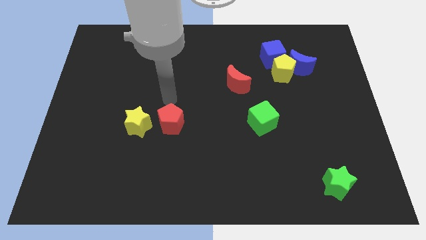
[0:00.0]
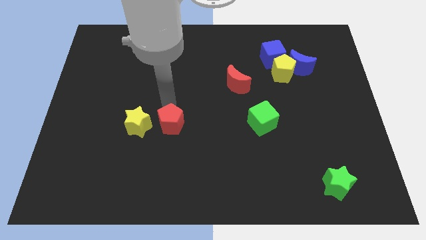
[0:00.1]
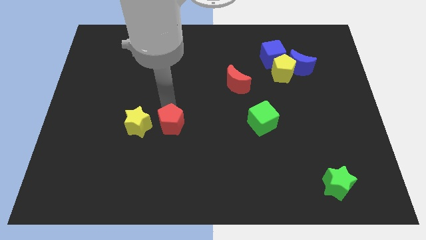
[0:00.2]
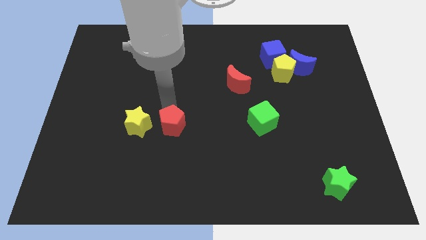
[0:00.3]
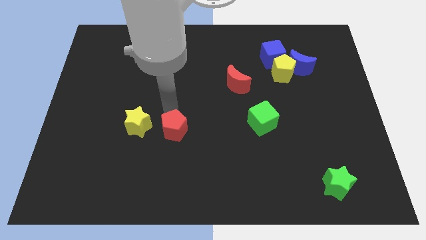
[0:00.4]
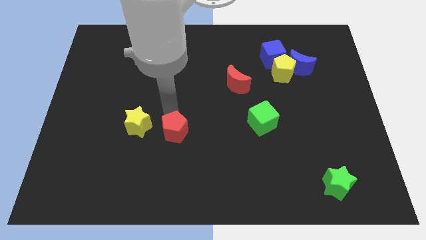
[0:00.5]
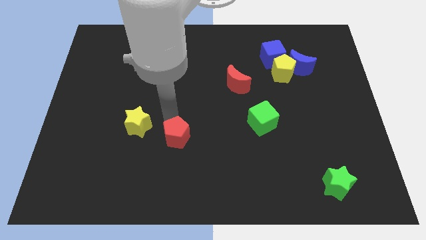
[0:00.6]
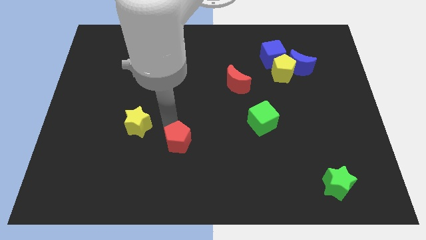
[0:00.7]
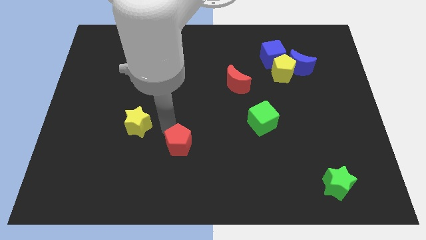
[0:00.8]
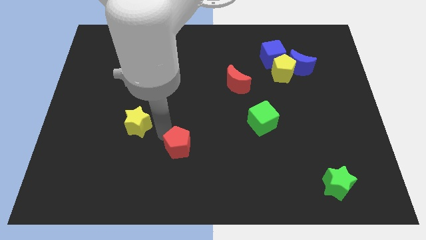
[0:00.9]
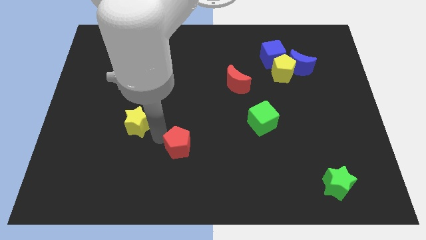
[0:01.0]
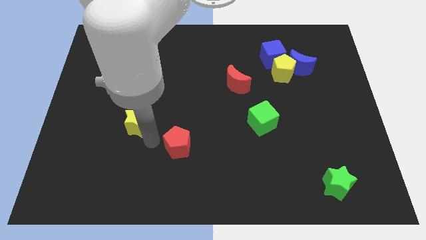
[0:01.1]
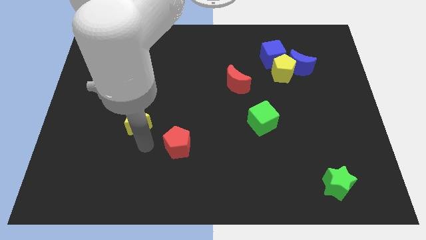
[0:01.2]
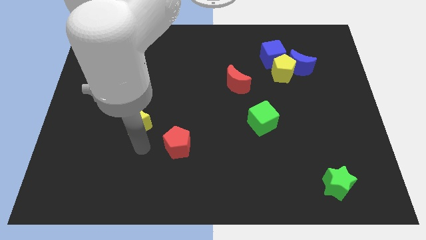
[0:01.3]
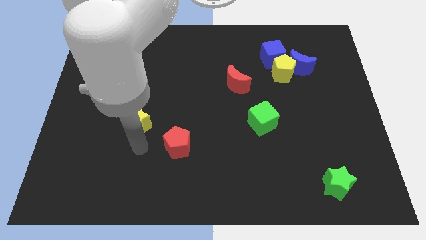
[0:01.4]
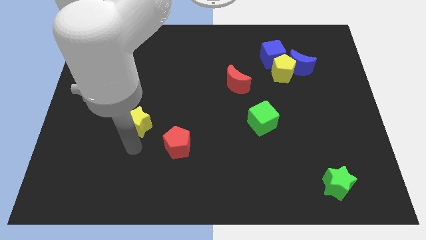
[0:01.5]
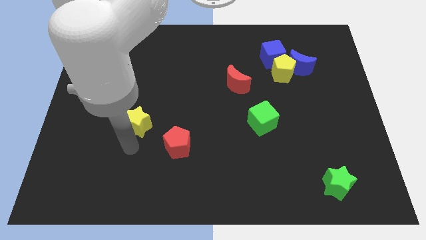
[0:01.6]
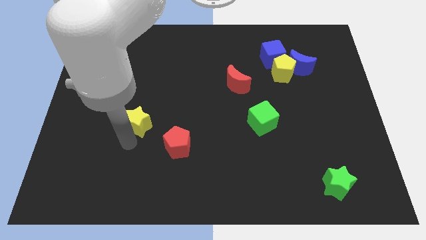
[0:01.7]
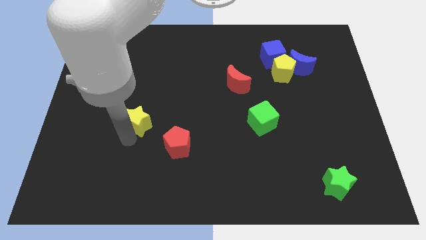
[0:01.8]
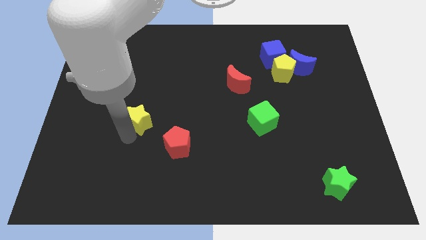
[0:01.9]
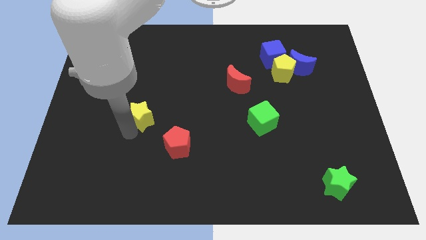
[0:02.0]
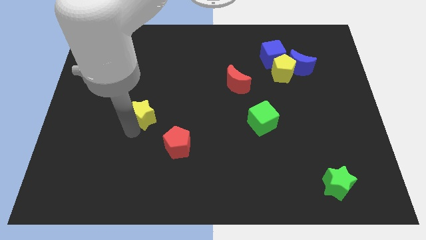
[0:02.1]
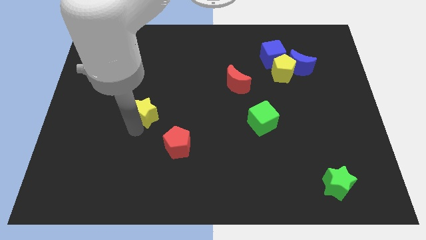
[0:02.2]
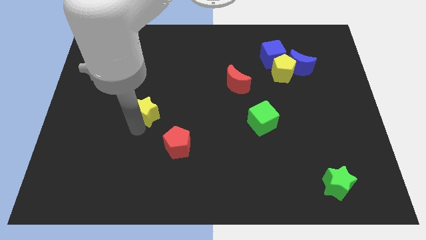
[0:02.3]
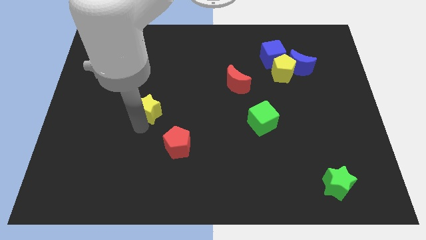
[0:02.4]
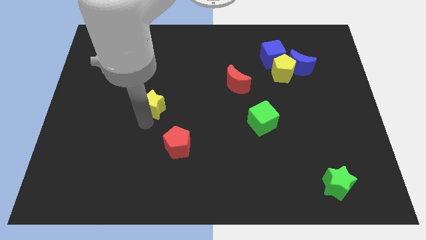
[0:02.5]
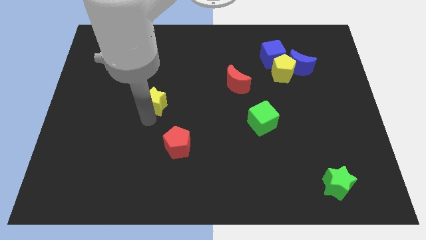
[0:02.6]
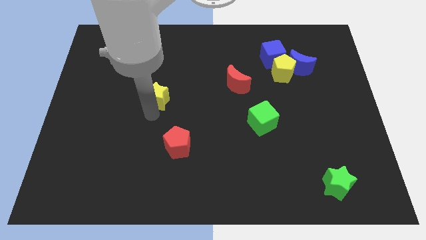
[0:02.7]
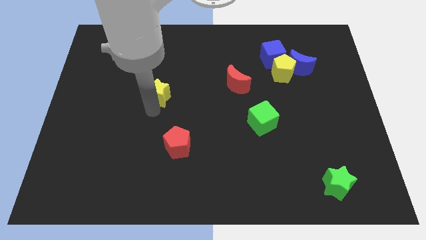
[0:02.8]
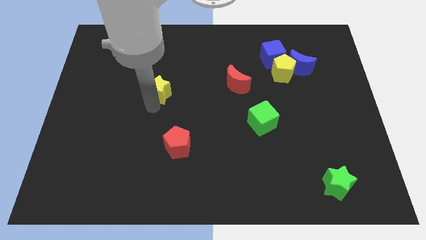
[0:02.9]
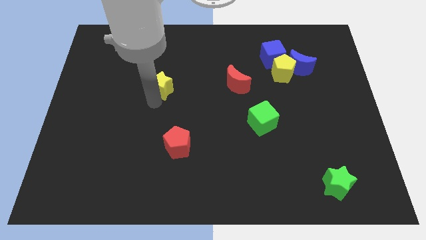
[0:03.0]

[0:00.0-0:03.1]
place the yellow star diagonally top left to the red pentagon

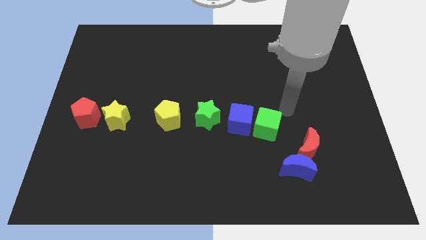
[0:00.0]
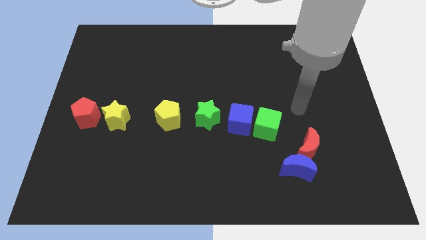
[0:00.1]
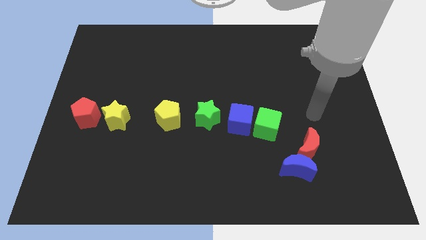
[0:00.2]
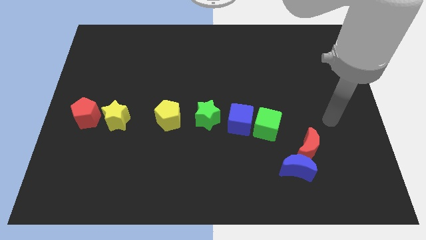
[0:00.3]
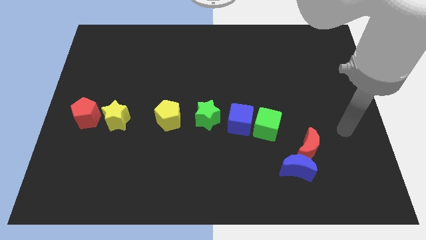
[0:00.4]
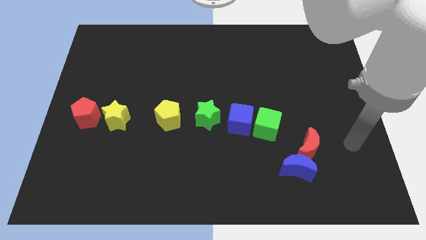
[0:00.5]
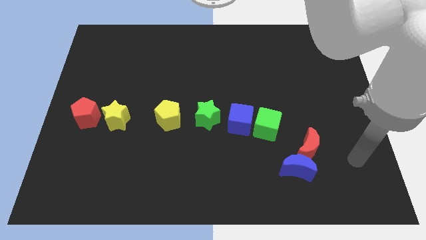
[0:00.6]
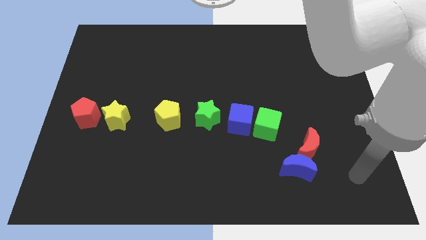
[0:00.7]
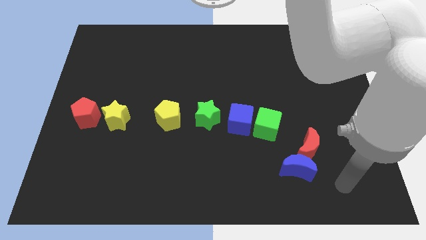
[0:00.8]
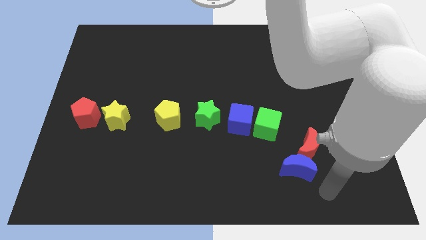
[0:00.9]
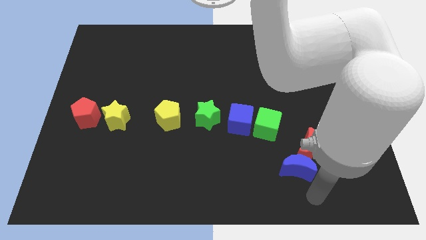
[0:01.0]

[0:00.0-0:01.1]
move your arm towards the blue crescent

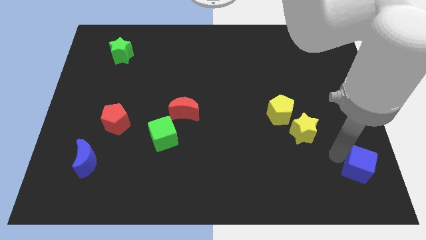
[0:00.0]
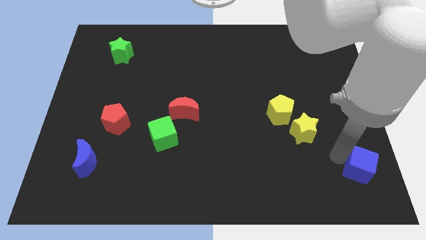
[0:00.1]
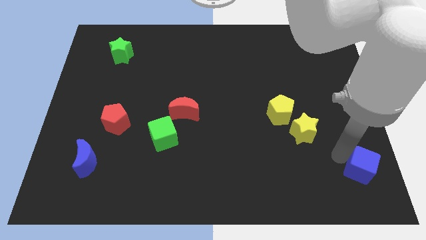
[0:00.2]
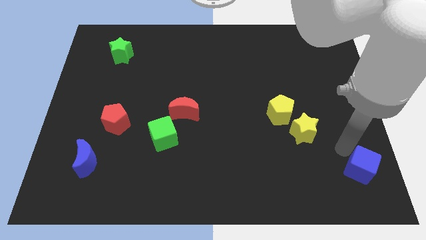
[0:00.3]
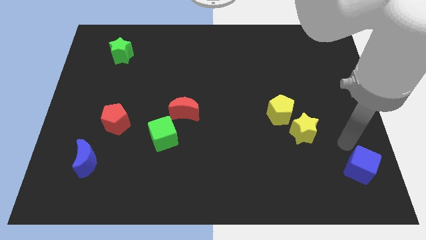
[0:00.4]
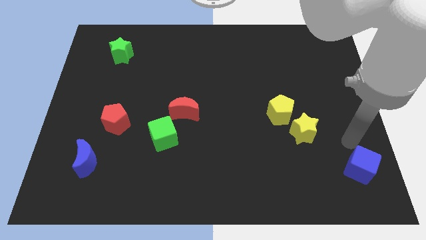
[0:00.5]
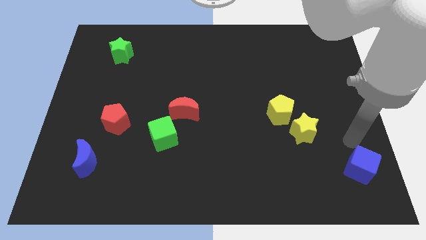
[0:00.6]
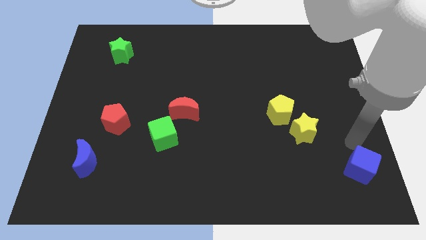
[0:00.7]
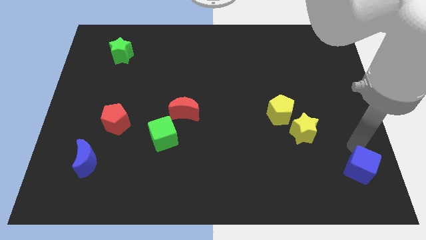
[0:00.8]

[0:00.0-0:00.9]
slightly move the blue cube towards bottom right

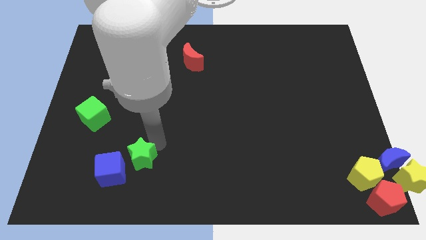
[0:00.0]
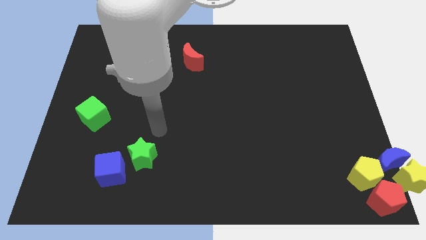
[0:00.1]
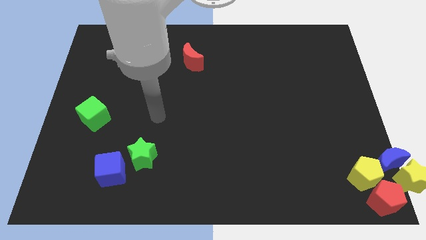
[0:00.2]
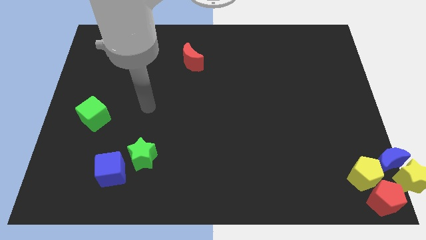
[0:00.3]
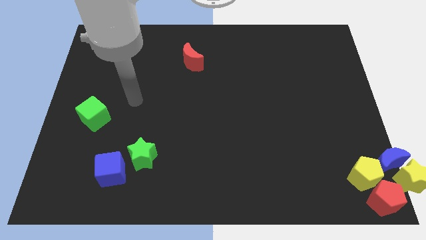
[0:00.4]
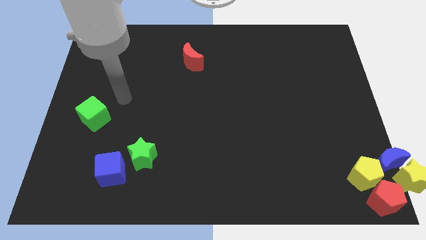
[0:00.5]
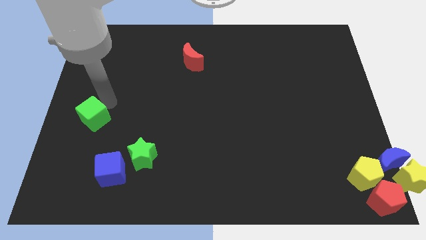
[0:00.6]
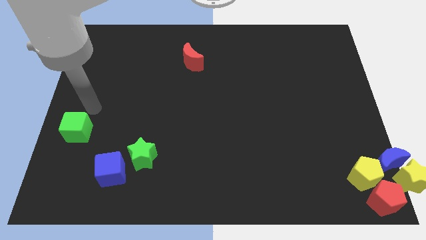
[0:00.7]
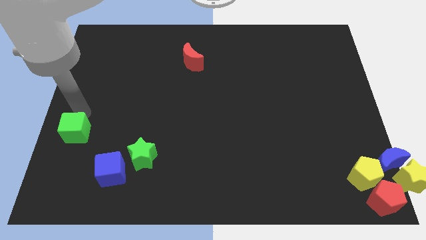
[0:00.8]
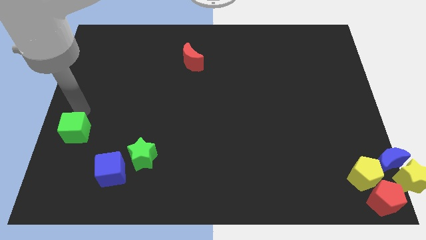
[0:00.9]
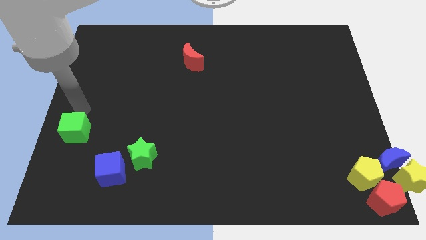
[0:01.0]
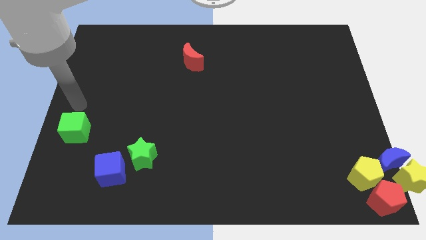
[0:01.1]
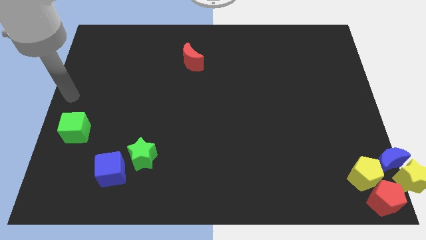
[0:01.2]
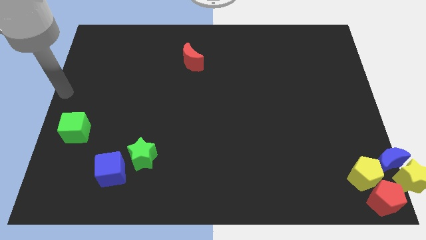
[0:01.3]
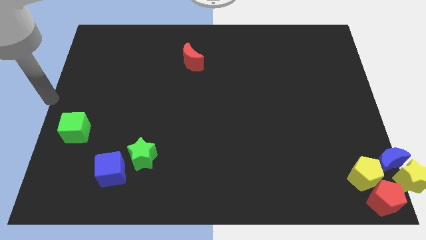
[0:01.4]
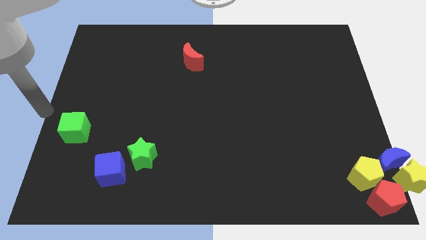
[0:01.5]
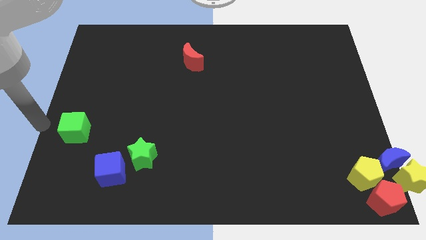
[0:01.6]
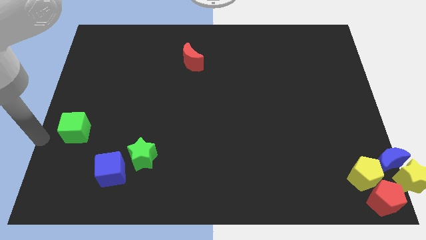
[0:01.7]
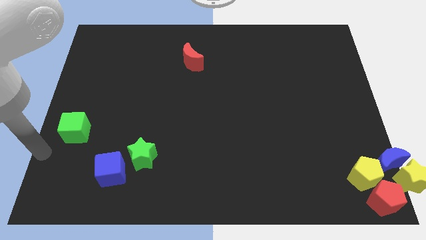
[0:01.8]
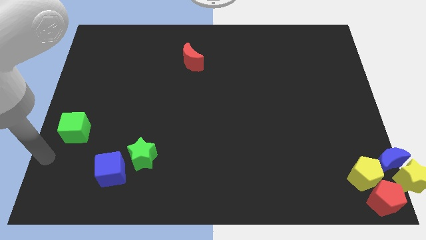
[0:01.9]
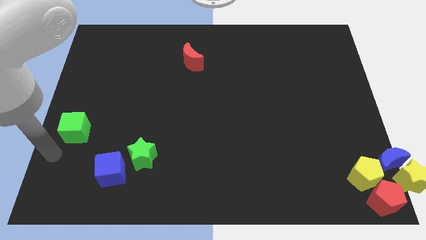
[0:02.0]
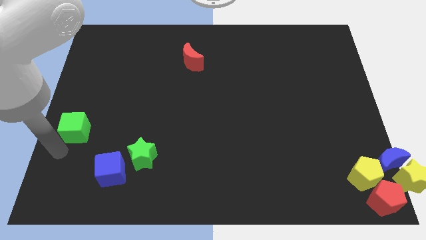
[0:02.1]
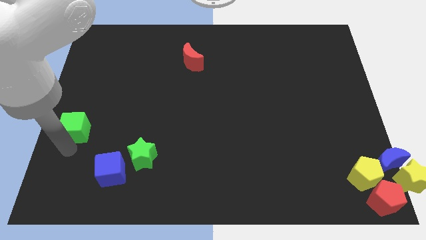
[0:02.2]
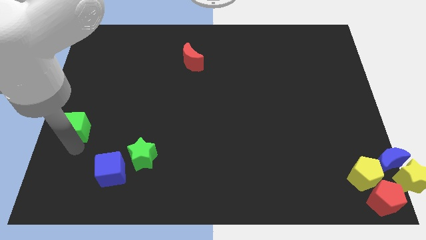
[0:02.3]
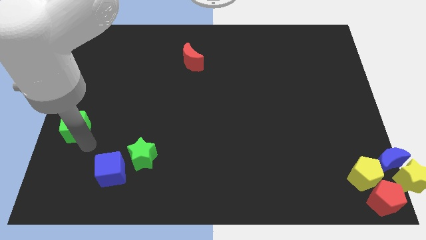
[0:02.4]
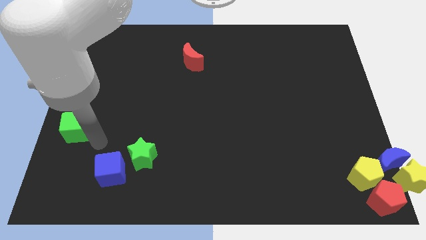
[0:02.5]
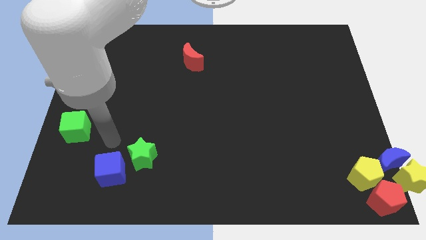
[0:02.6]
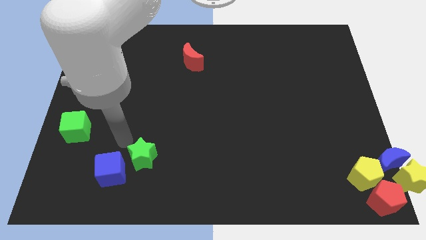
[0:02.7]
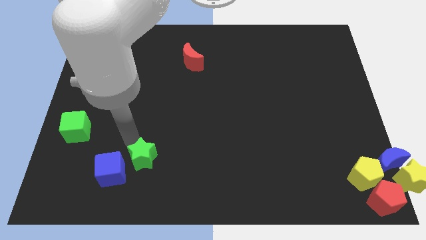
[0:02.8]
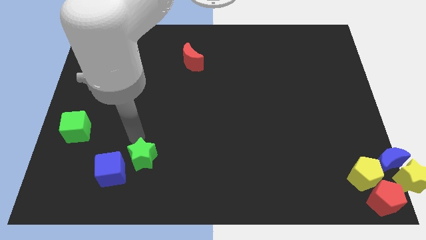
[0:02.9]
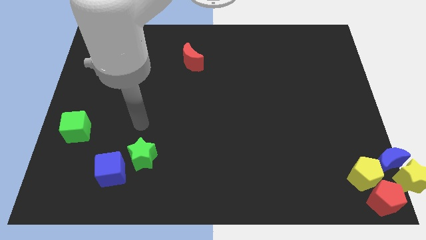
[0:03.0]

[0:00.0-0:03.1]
move the green cube slightly to the left

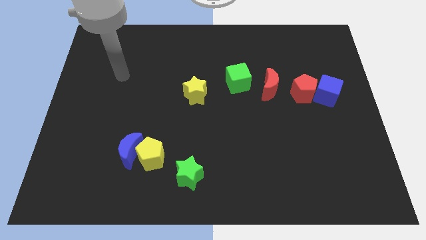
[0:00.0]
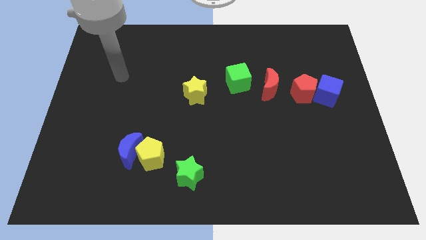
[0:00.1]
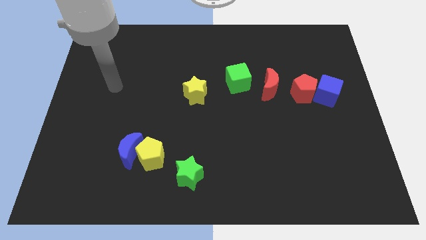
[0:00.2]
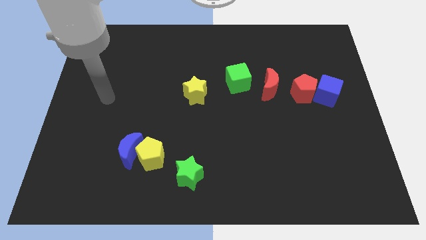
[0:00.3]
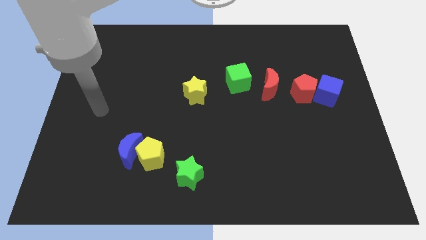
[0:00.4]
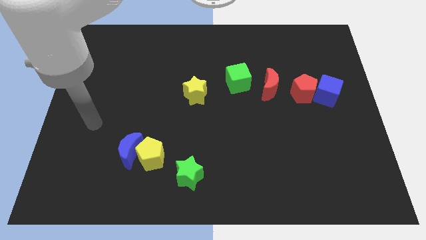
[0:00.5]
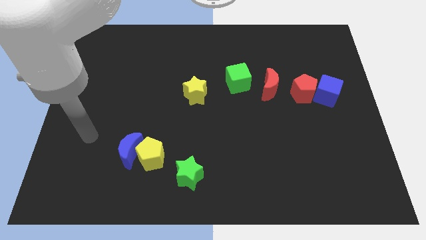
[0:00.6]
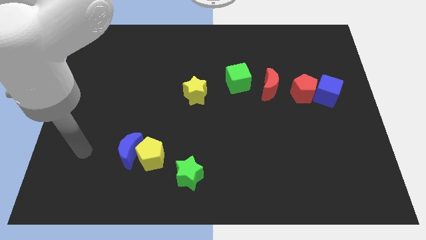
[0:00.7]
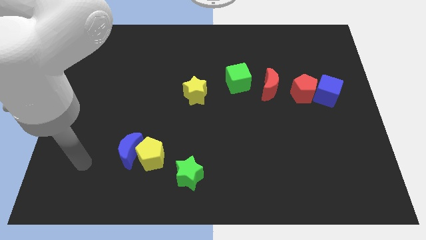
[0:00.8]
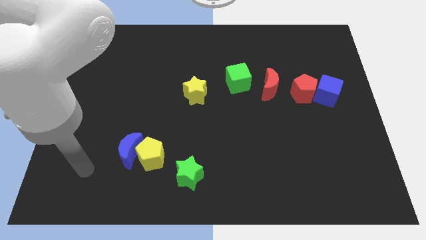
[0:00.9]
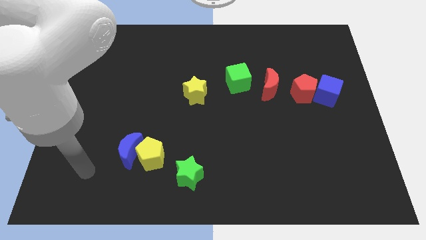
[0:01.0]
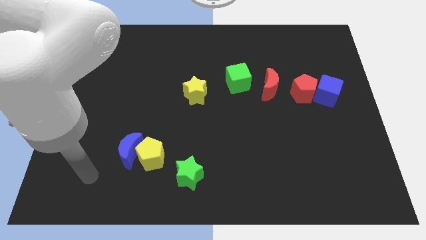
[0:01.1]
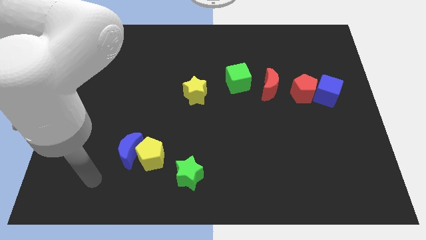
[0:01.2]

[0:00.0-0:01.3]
move your hand towards the bottom
